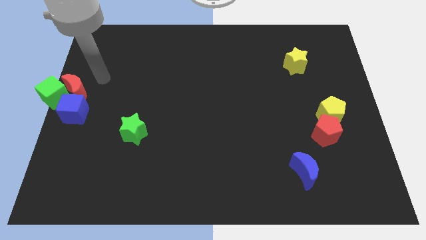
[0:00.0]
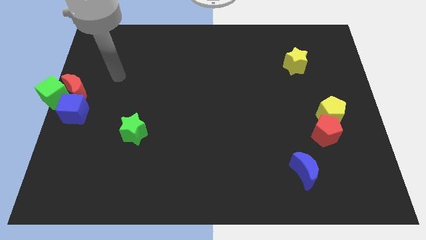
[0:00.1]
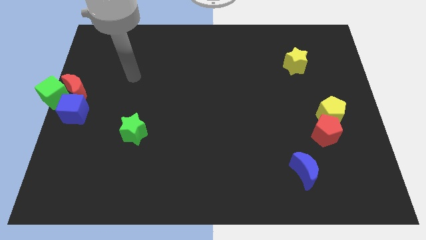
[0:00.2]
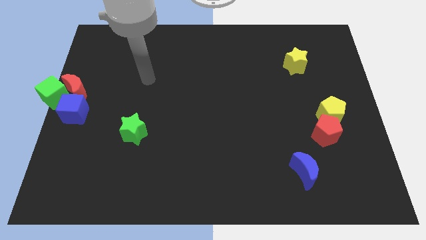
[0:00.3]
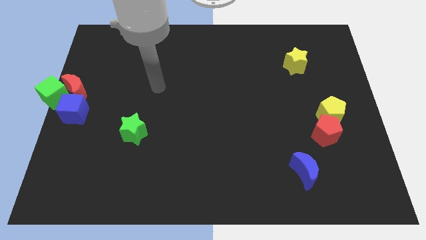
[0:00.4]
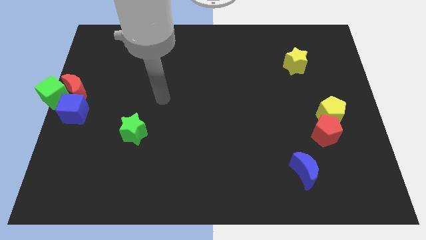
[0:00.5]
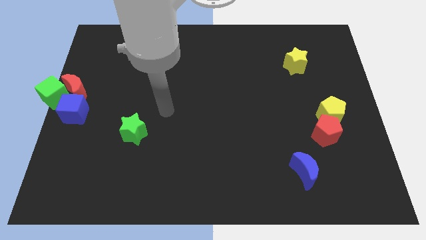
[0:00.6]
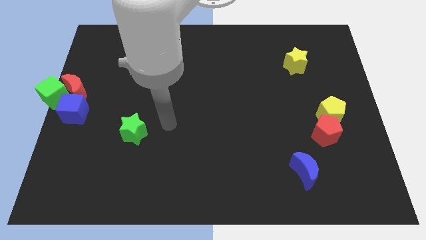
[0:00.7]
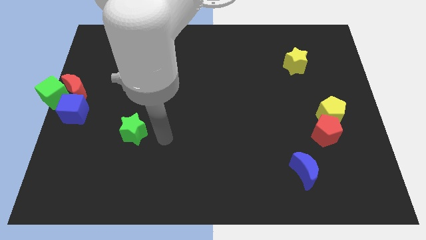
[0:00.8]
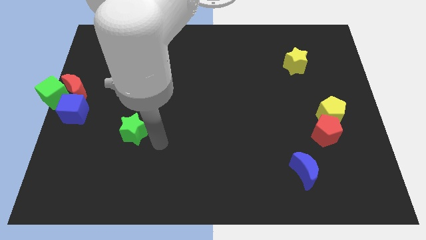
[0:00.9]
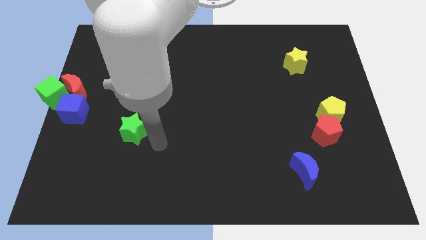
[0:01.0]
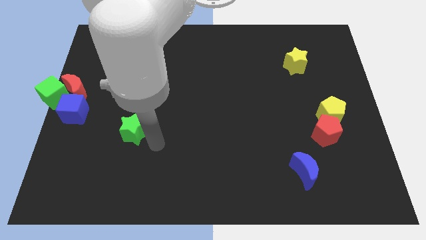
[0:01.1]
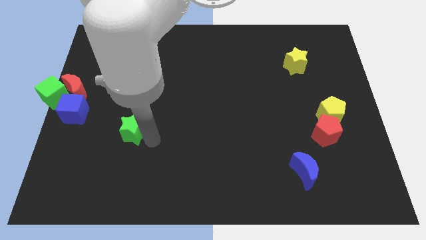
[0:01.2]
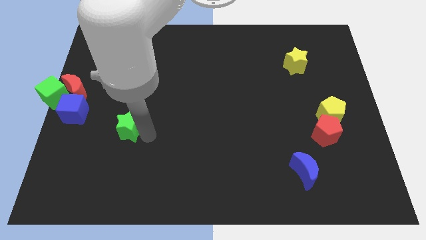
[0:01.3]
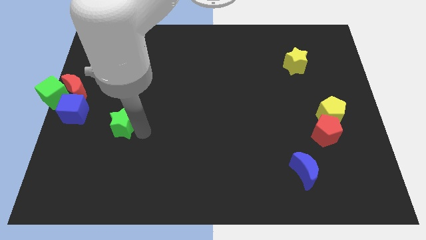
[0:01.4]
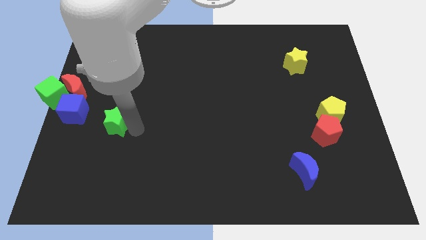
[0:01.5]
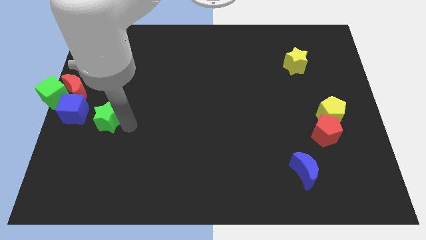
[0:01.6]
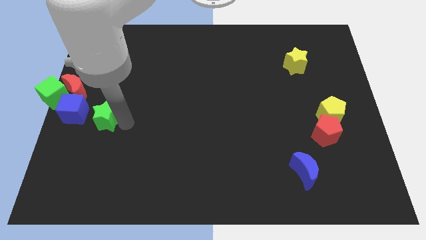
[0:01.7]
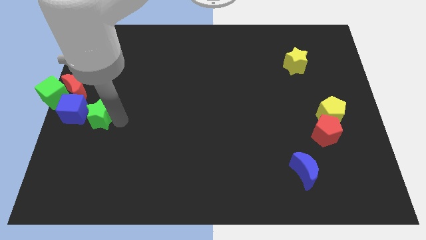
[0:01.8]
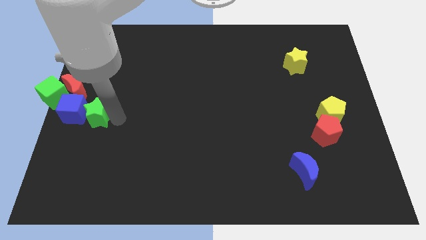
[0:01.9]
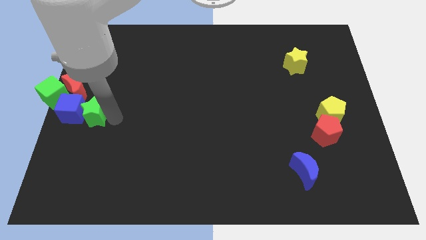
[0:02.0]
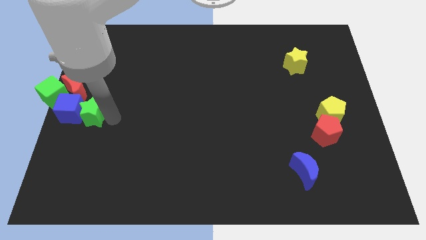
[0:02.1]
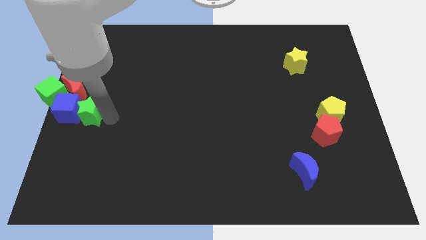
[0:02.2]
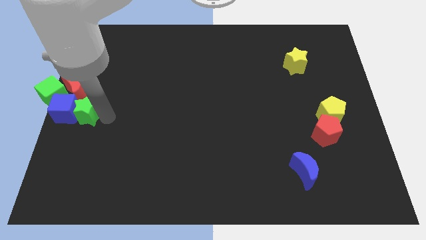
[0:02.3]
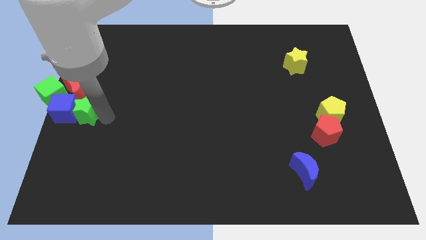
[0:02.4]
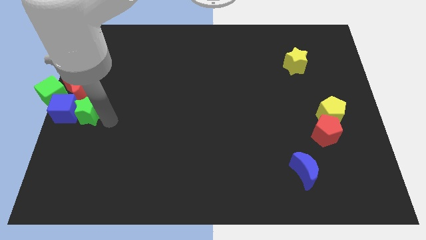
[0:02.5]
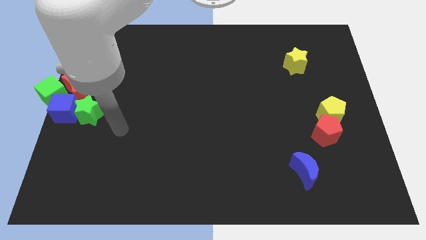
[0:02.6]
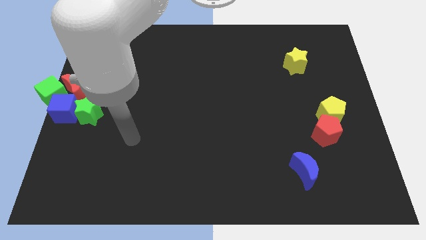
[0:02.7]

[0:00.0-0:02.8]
place the green star left to the blue cube

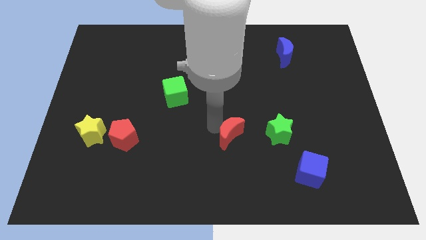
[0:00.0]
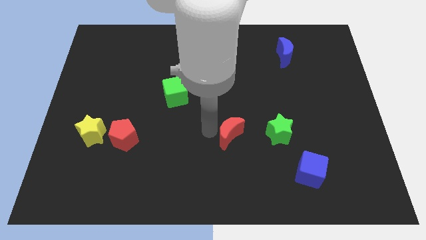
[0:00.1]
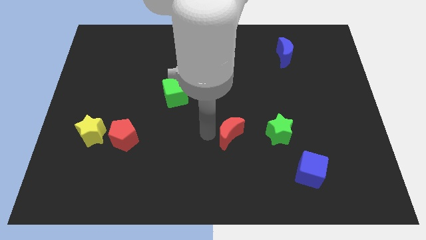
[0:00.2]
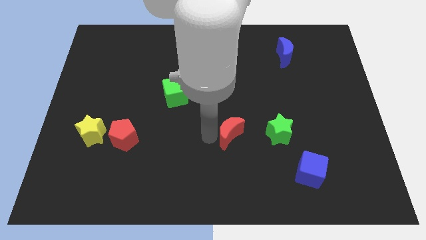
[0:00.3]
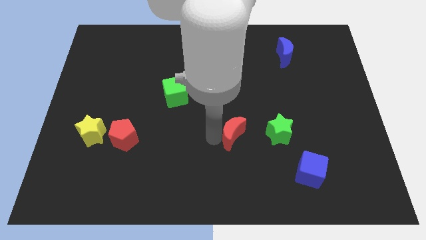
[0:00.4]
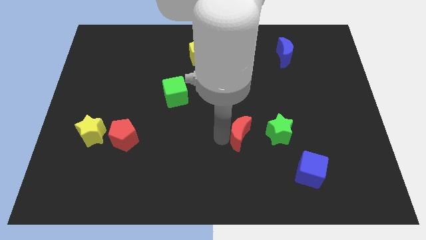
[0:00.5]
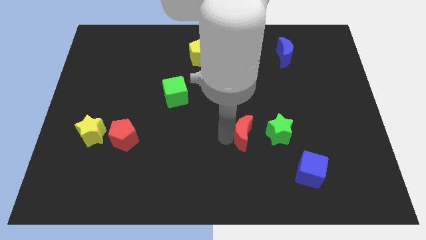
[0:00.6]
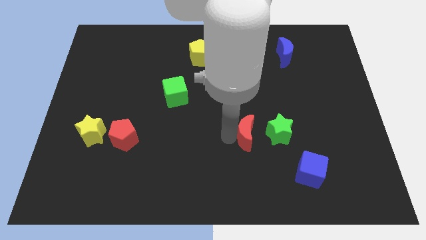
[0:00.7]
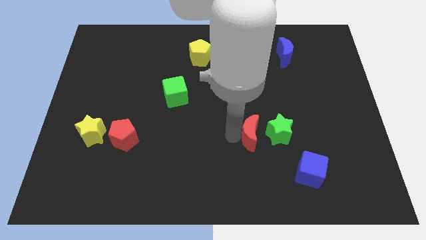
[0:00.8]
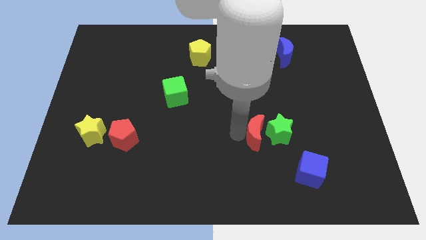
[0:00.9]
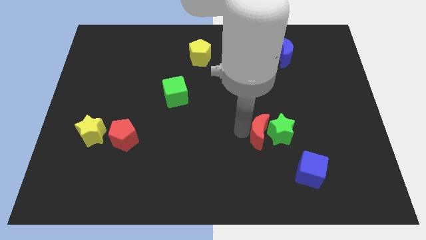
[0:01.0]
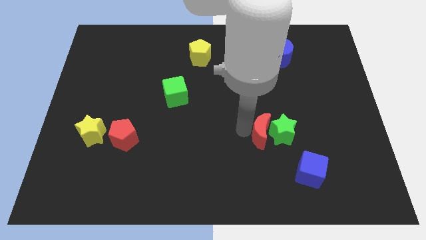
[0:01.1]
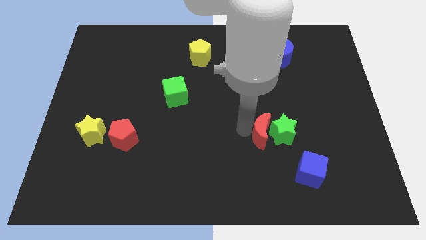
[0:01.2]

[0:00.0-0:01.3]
move the red crescent into the left side of the green star

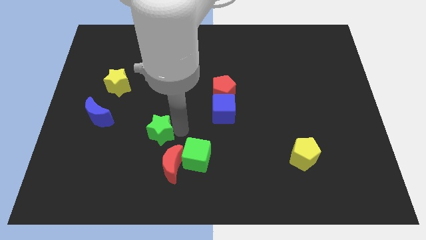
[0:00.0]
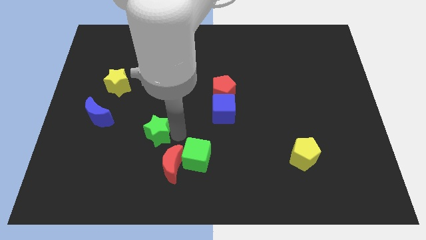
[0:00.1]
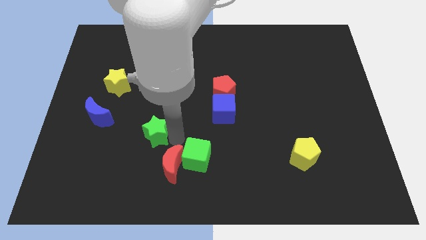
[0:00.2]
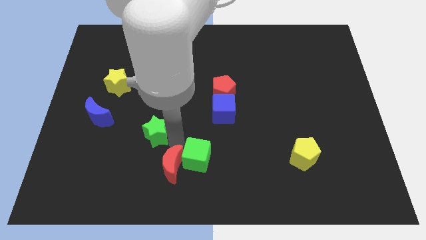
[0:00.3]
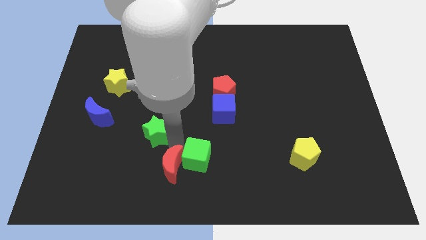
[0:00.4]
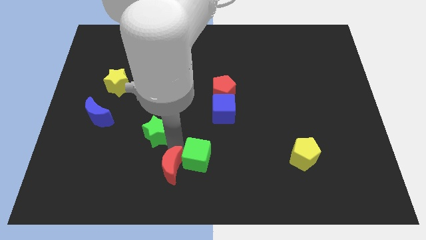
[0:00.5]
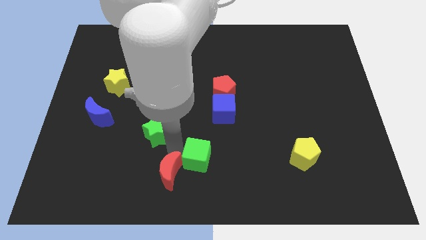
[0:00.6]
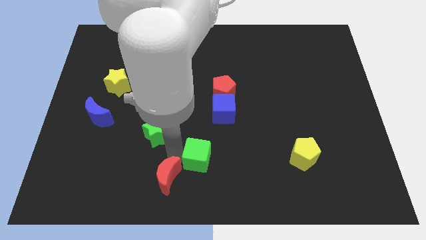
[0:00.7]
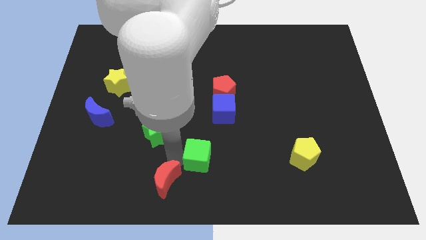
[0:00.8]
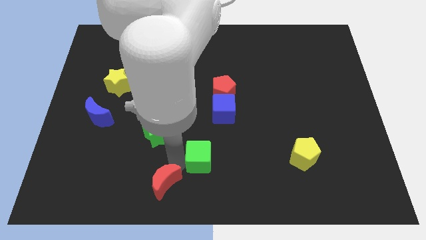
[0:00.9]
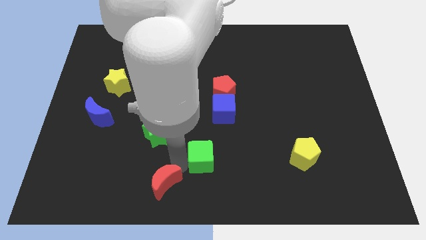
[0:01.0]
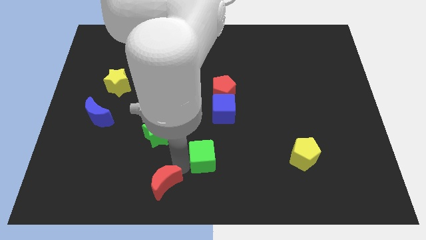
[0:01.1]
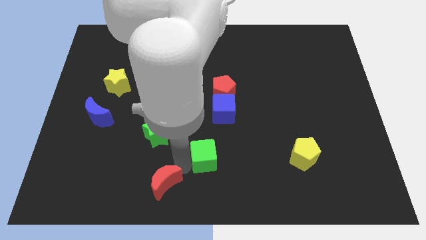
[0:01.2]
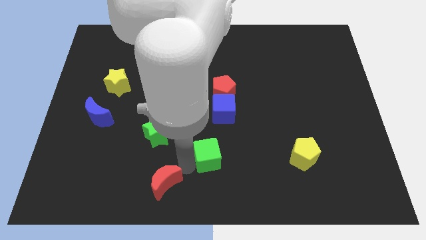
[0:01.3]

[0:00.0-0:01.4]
separate the red crescent and green cube from each other

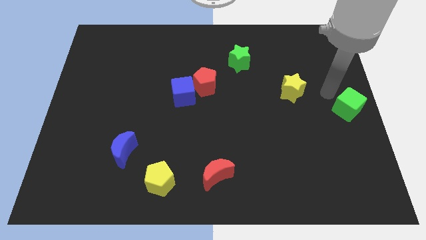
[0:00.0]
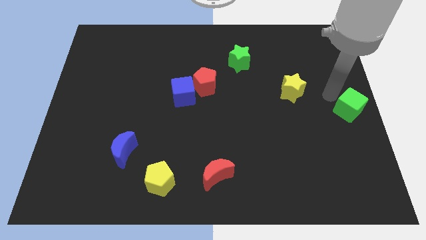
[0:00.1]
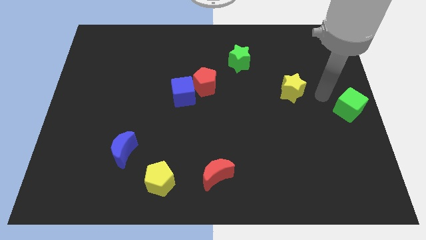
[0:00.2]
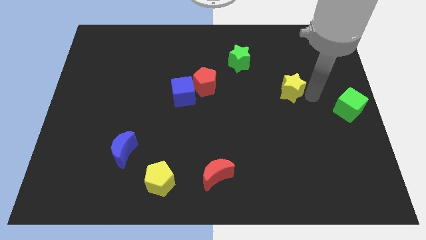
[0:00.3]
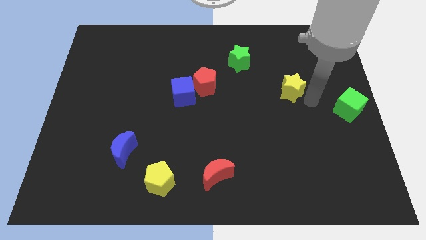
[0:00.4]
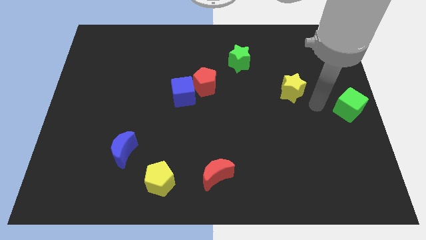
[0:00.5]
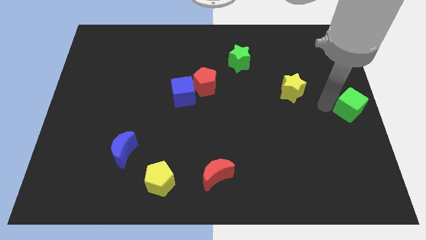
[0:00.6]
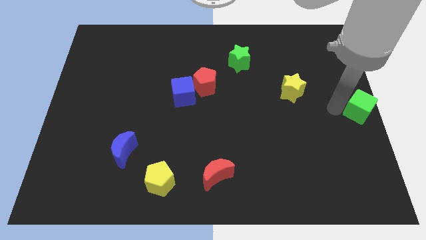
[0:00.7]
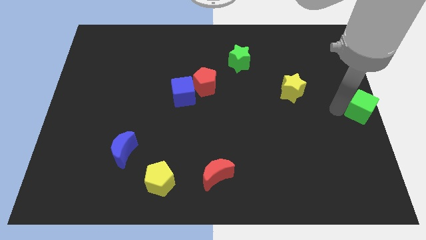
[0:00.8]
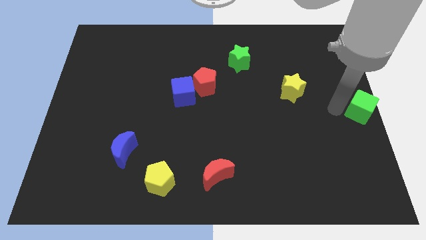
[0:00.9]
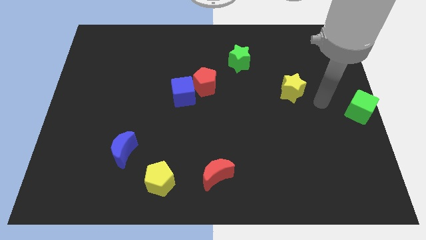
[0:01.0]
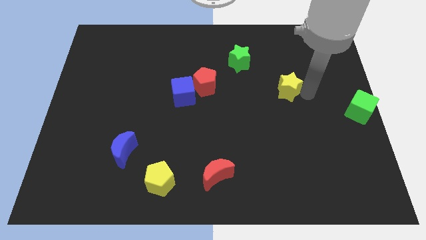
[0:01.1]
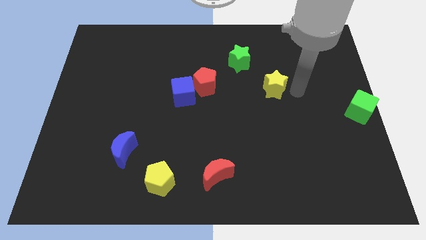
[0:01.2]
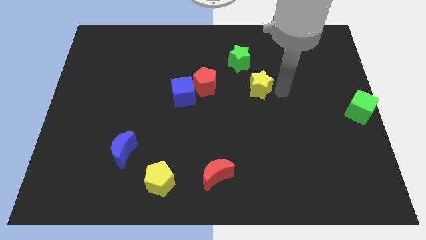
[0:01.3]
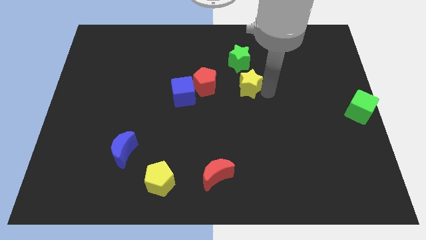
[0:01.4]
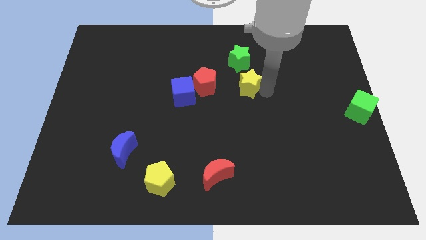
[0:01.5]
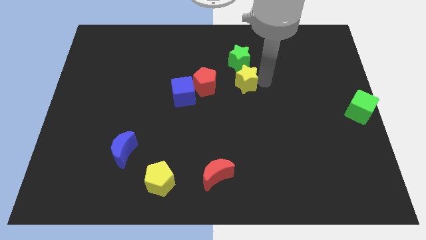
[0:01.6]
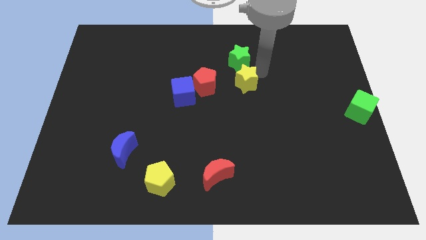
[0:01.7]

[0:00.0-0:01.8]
push the yellow star to the bottom right of the green star

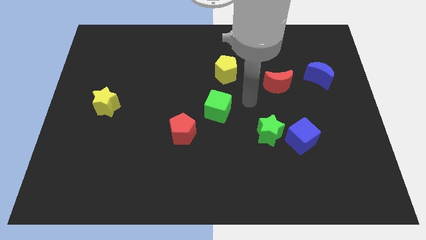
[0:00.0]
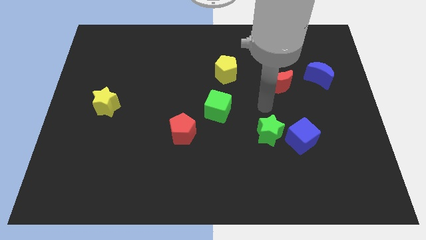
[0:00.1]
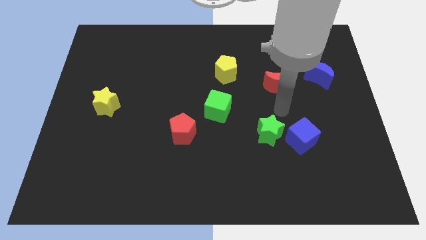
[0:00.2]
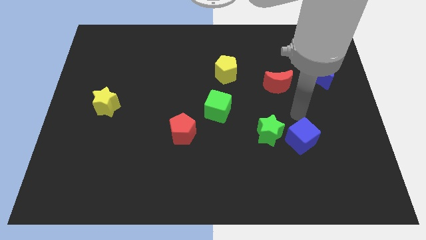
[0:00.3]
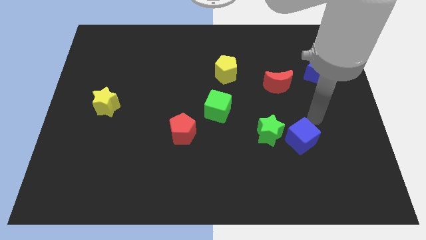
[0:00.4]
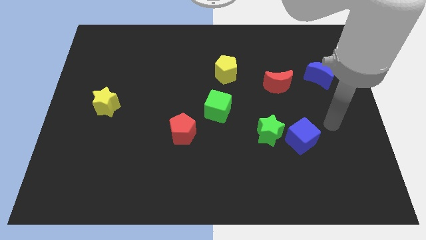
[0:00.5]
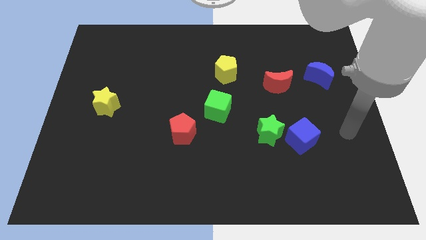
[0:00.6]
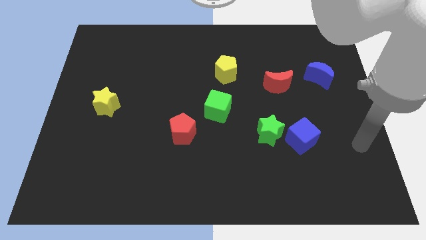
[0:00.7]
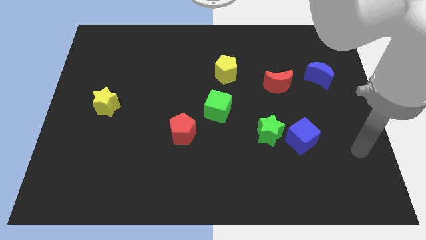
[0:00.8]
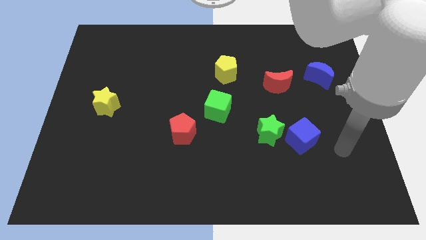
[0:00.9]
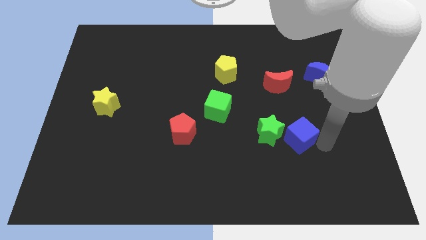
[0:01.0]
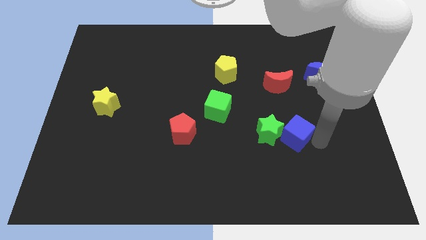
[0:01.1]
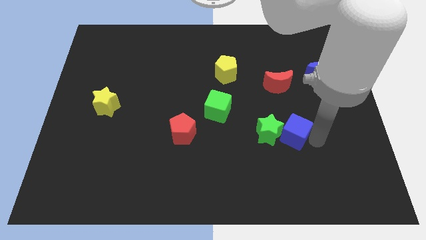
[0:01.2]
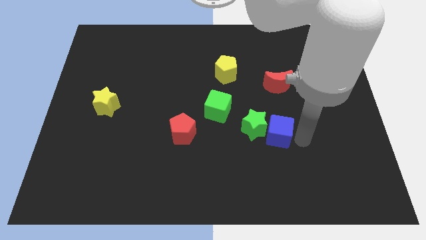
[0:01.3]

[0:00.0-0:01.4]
push the green star and blue cube close to the green cube

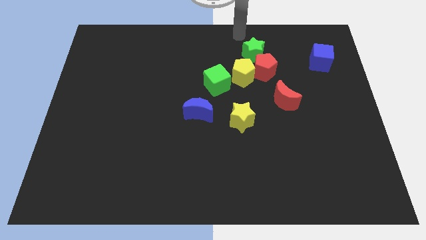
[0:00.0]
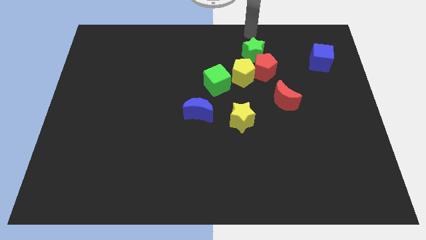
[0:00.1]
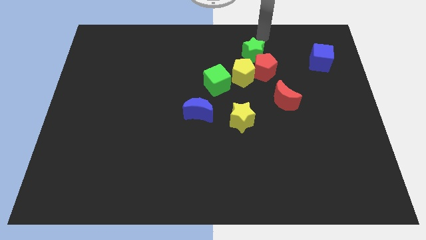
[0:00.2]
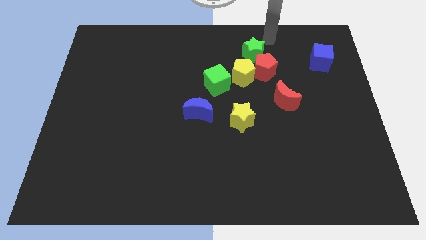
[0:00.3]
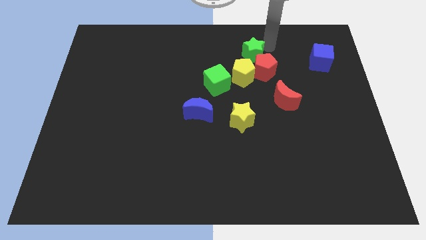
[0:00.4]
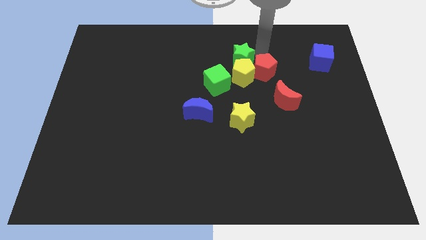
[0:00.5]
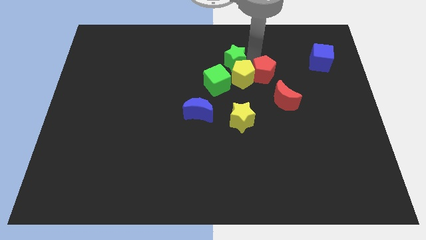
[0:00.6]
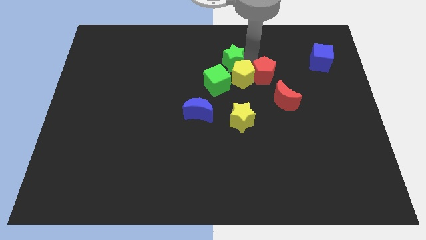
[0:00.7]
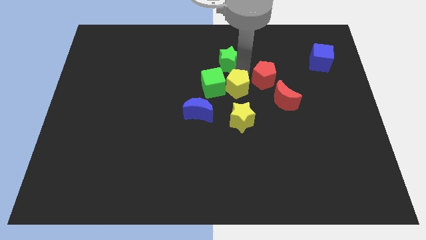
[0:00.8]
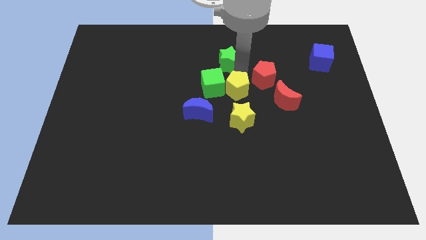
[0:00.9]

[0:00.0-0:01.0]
push the green star into yellow pentagon
